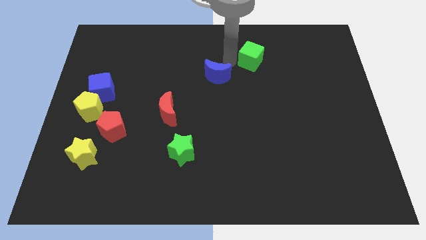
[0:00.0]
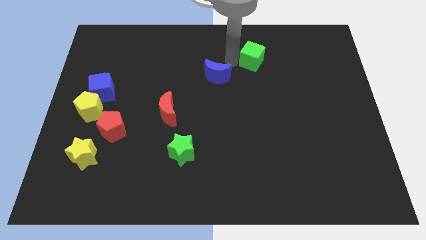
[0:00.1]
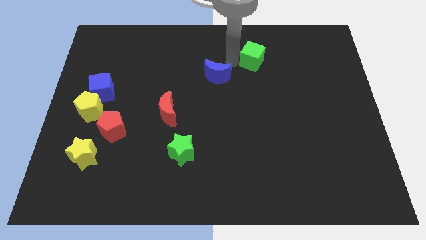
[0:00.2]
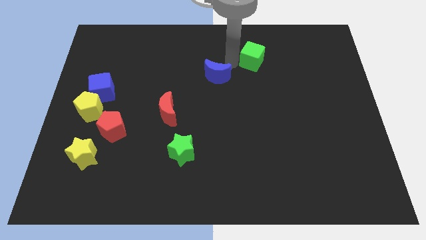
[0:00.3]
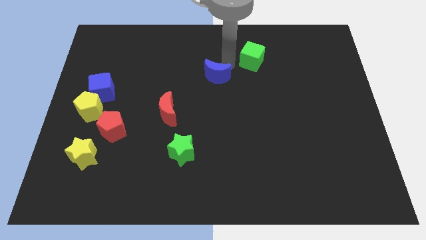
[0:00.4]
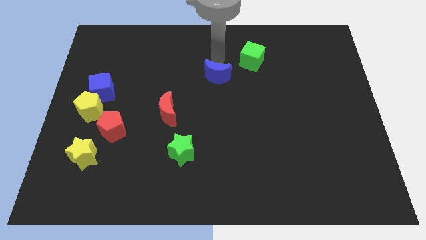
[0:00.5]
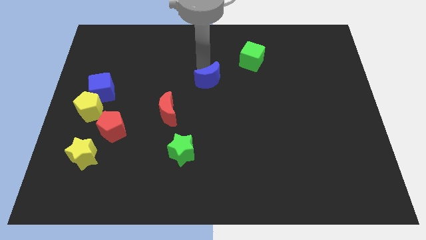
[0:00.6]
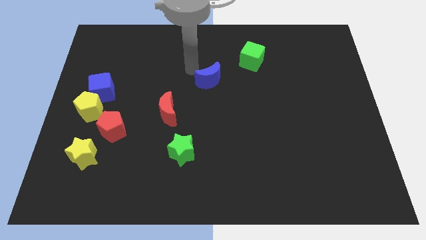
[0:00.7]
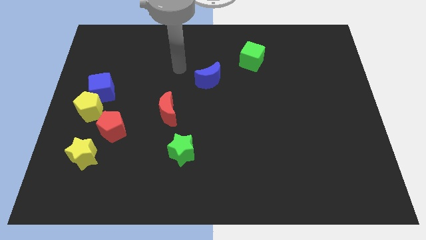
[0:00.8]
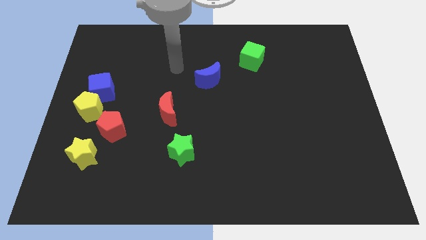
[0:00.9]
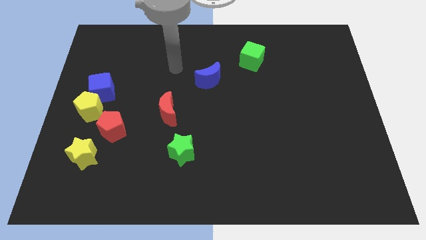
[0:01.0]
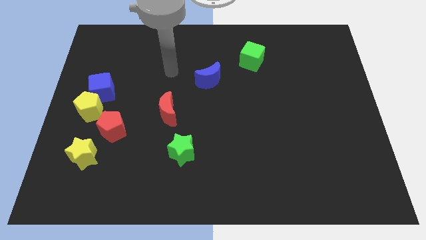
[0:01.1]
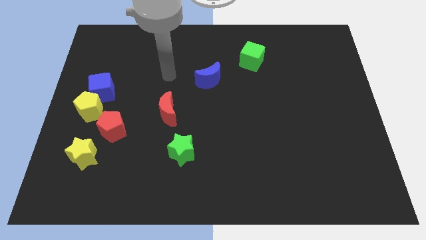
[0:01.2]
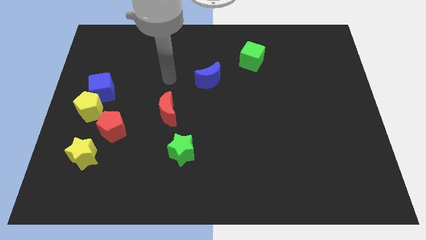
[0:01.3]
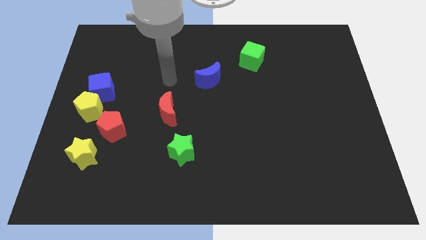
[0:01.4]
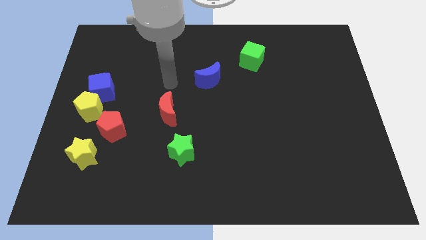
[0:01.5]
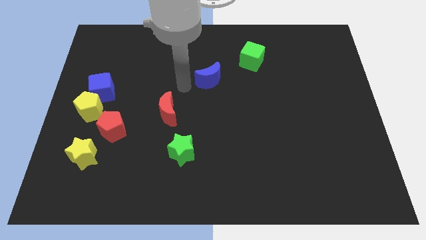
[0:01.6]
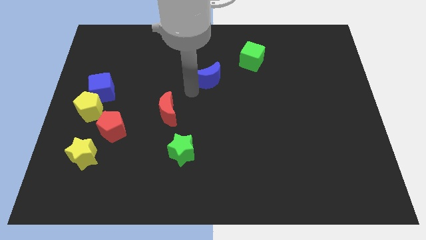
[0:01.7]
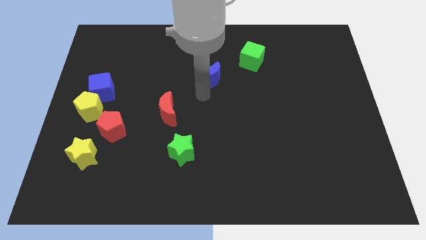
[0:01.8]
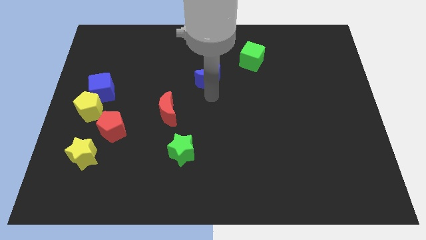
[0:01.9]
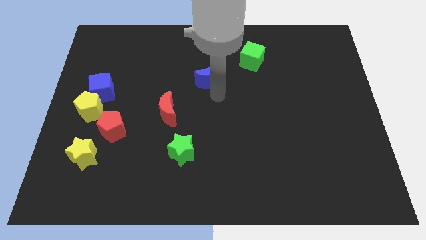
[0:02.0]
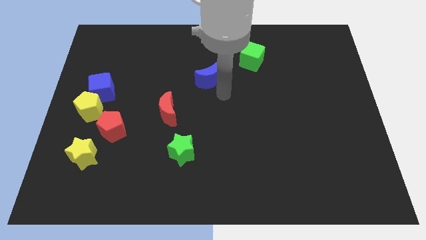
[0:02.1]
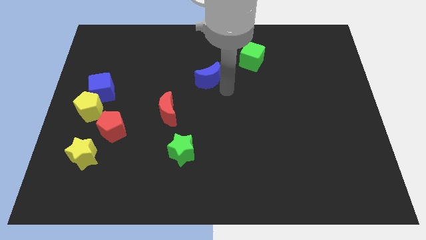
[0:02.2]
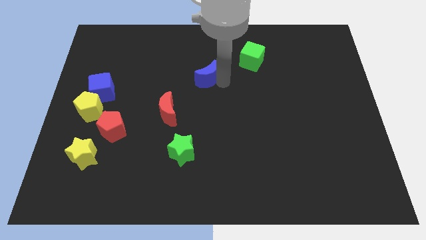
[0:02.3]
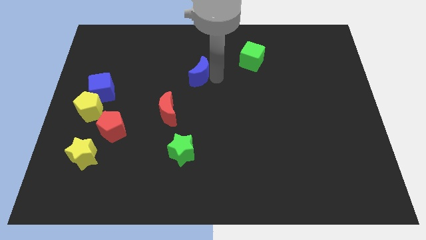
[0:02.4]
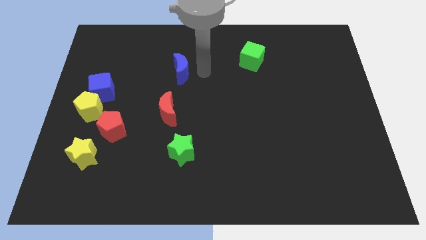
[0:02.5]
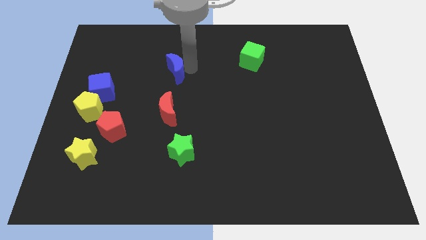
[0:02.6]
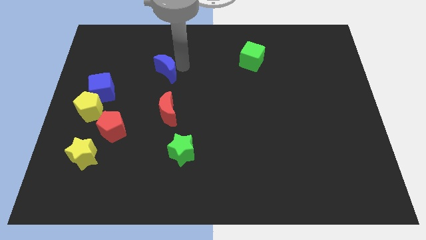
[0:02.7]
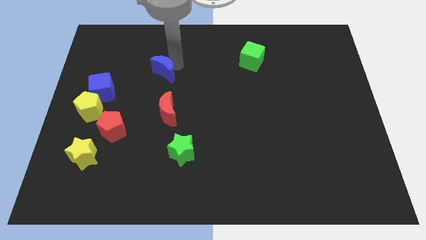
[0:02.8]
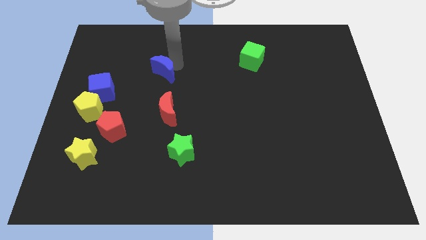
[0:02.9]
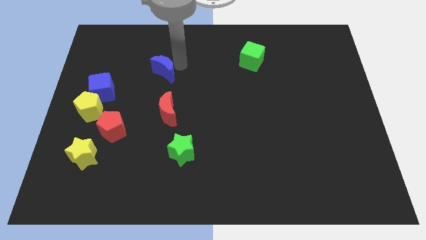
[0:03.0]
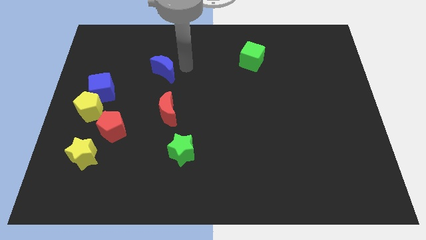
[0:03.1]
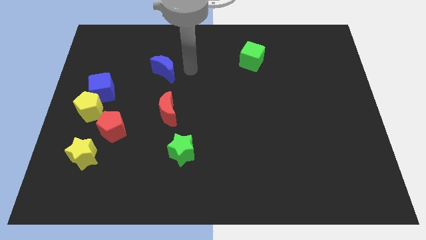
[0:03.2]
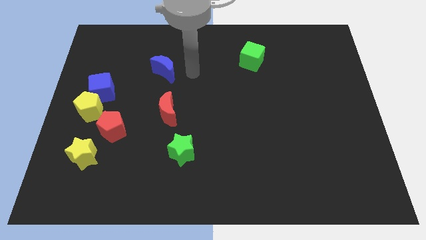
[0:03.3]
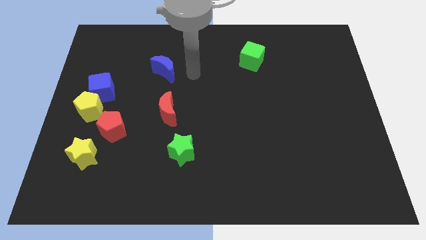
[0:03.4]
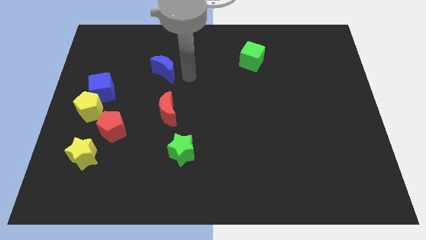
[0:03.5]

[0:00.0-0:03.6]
place the blue moon above the red moon

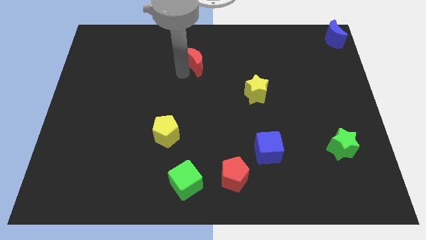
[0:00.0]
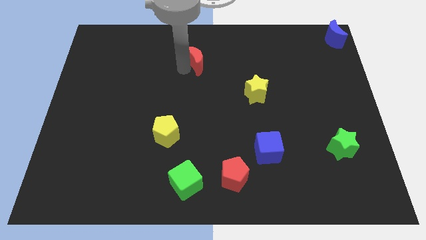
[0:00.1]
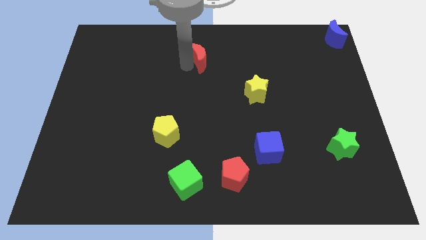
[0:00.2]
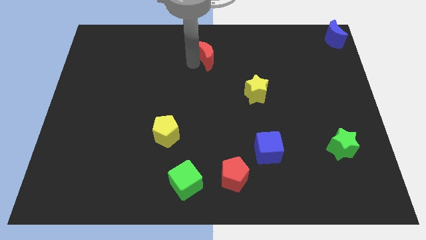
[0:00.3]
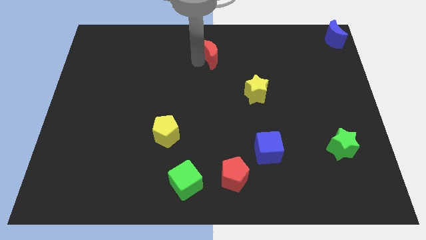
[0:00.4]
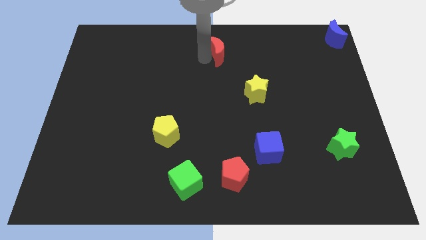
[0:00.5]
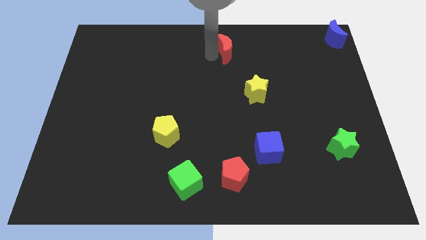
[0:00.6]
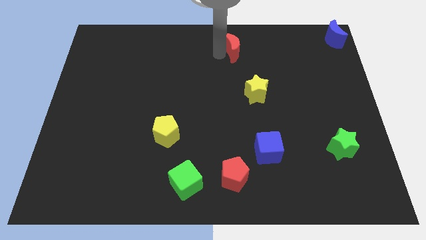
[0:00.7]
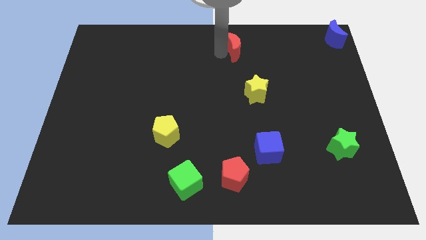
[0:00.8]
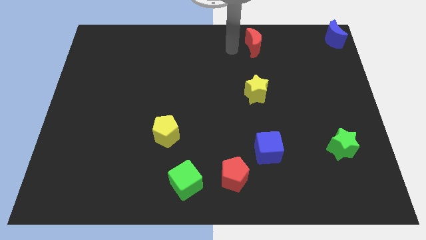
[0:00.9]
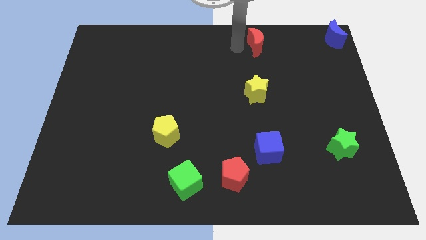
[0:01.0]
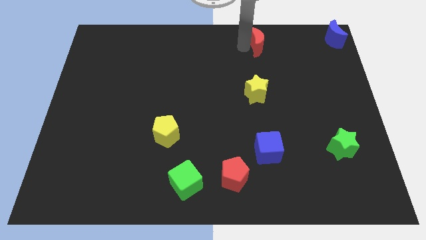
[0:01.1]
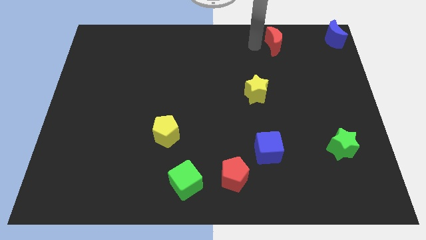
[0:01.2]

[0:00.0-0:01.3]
push the red crescent to the top of the yellow star

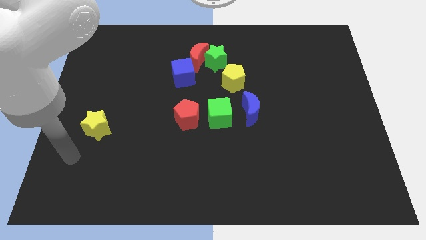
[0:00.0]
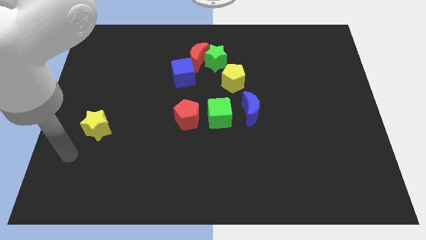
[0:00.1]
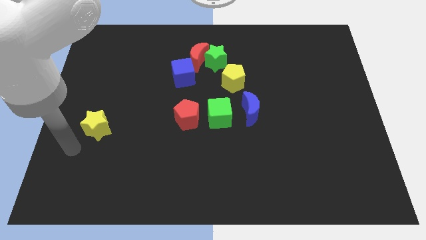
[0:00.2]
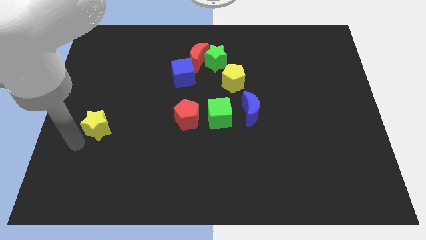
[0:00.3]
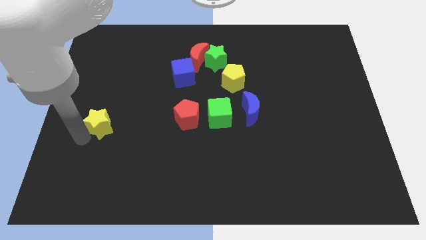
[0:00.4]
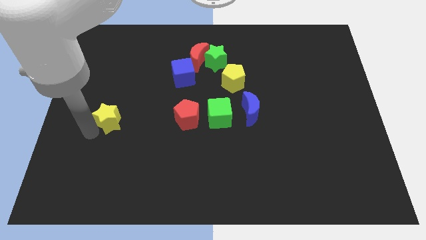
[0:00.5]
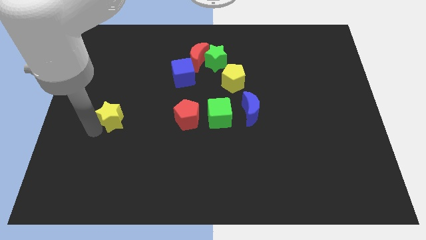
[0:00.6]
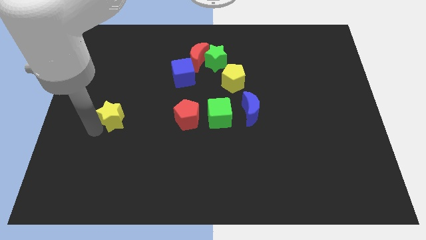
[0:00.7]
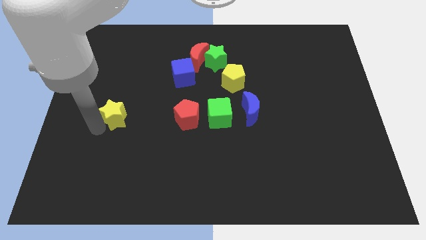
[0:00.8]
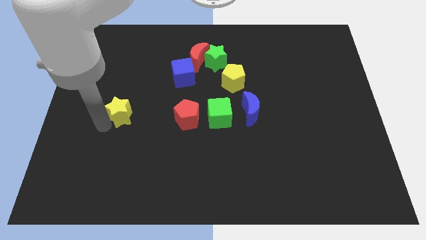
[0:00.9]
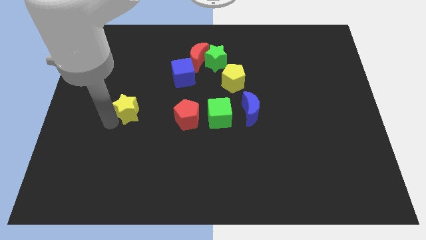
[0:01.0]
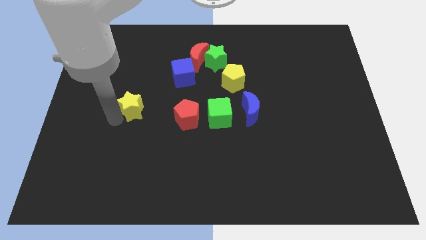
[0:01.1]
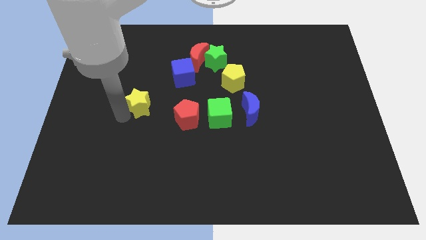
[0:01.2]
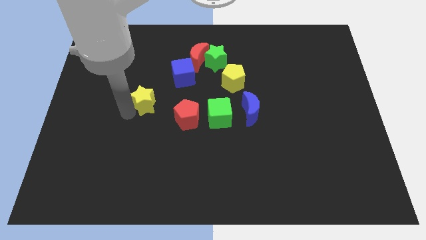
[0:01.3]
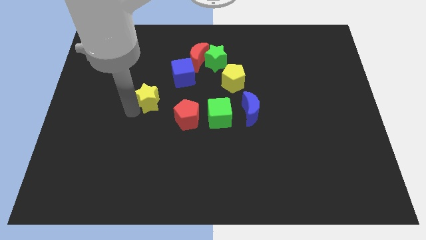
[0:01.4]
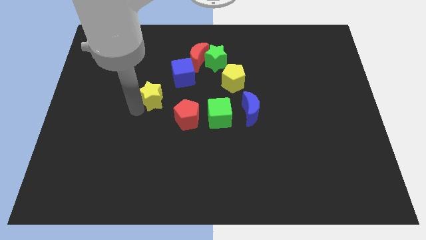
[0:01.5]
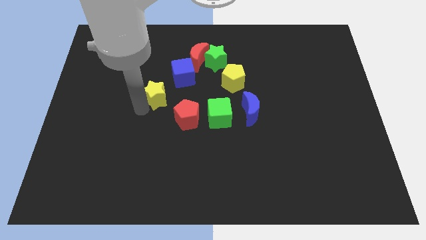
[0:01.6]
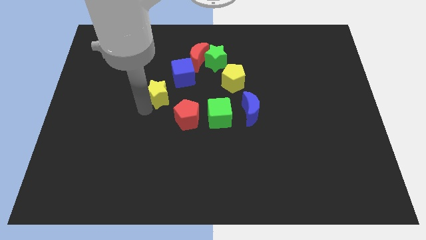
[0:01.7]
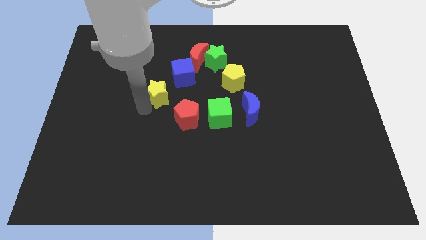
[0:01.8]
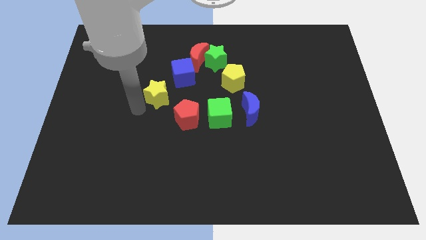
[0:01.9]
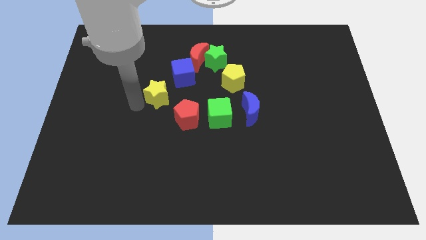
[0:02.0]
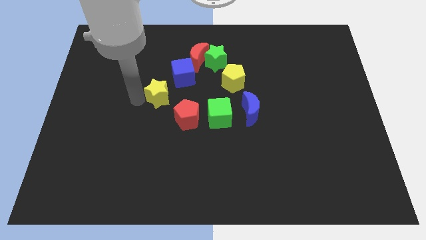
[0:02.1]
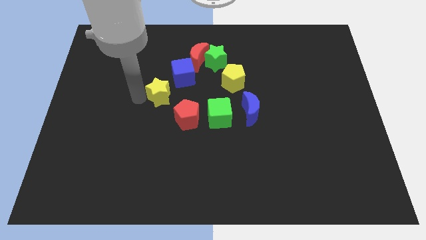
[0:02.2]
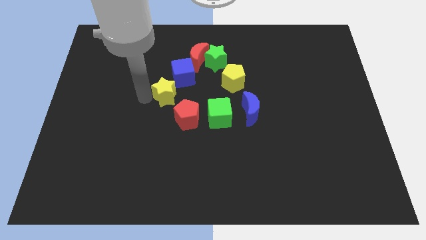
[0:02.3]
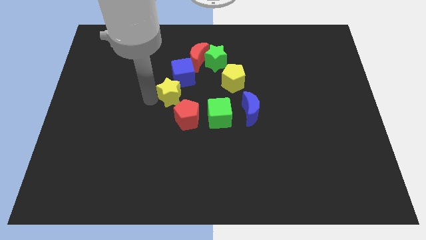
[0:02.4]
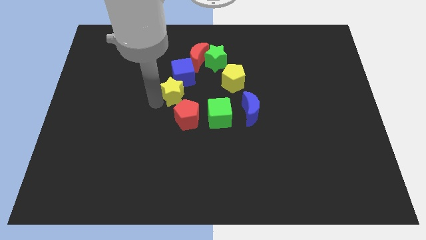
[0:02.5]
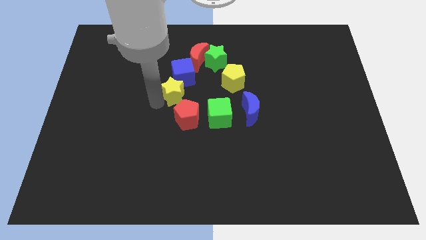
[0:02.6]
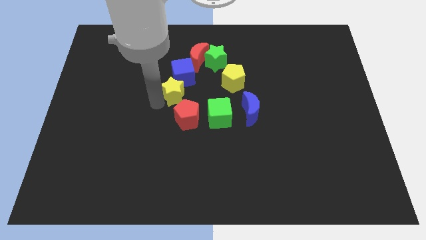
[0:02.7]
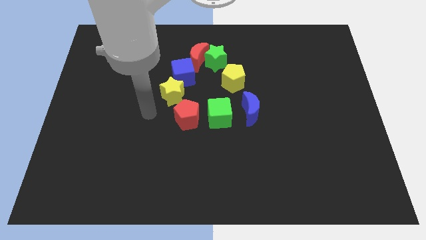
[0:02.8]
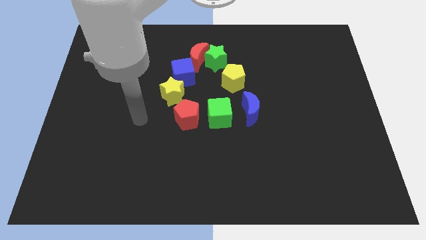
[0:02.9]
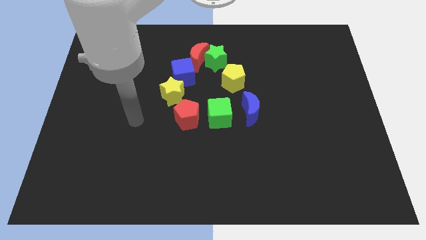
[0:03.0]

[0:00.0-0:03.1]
move the yellow star in between the red pentagon and blue cube in the center

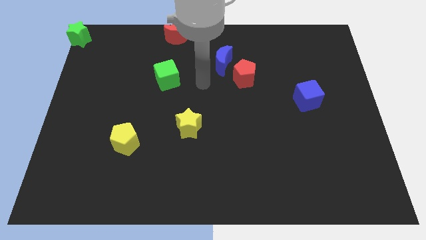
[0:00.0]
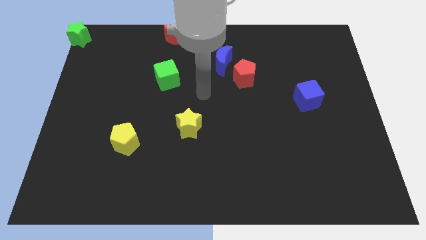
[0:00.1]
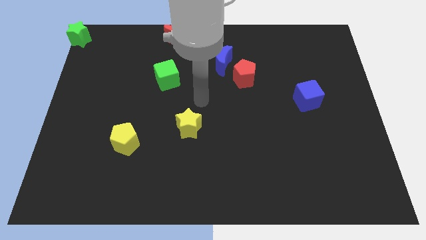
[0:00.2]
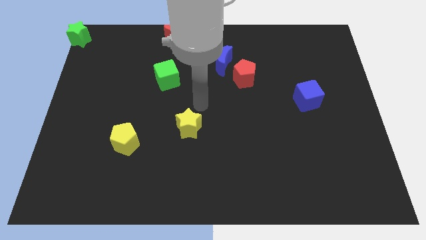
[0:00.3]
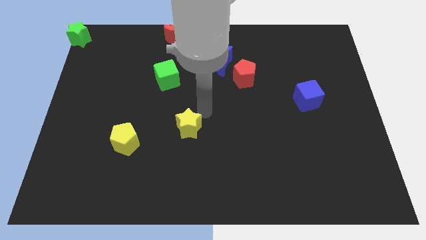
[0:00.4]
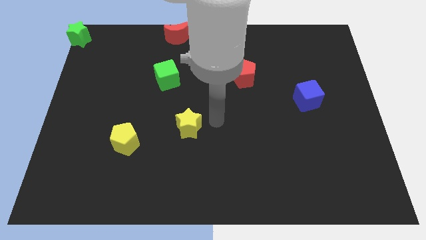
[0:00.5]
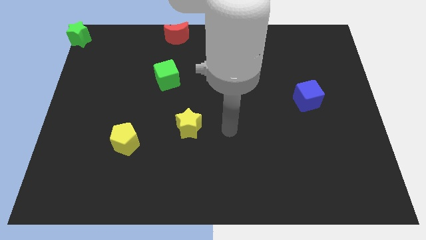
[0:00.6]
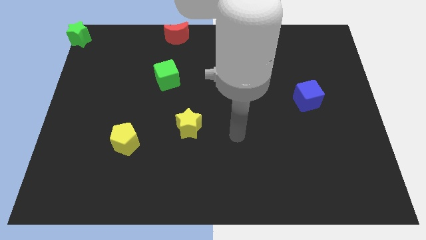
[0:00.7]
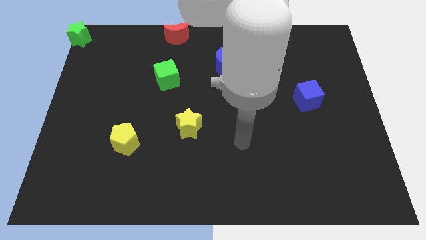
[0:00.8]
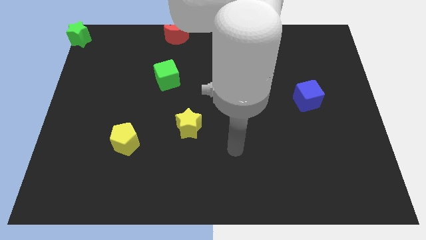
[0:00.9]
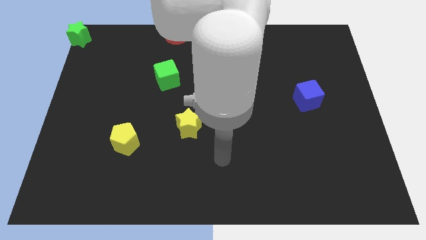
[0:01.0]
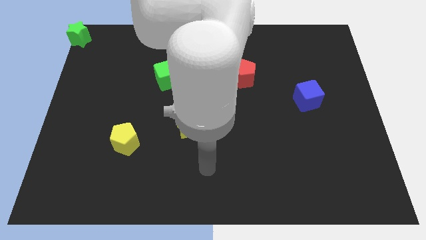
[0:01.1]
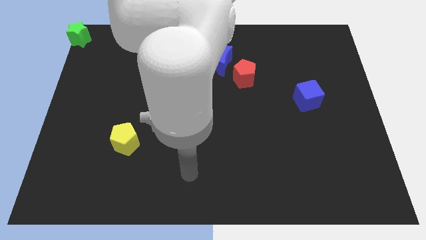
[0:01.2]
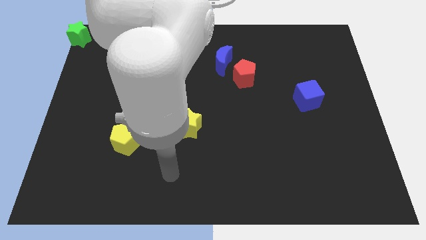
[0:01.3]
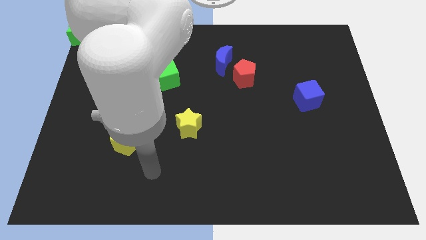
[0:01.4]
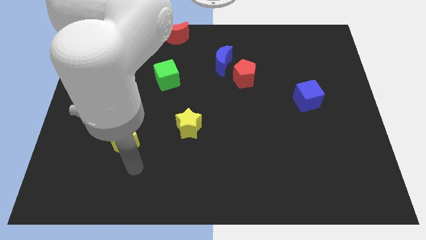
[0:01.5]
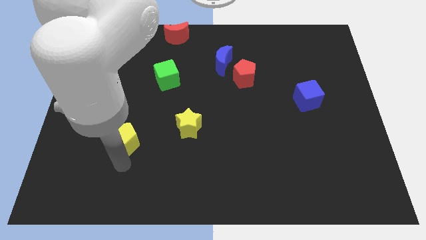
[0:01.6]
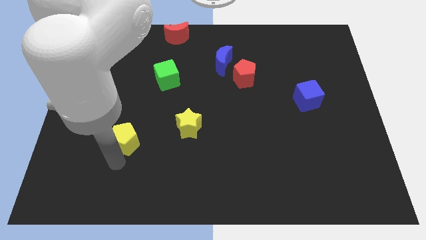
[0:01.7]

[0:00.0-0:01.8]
place the arm below the yellow pentagon
